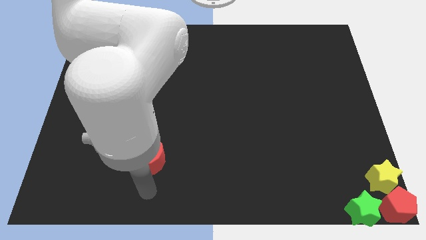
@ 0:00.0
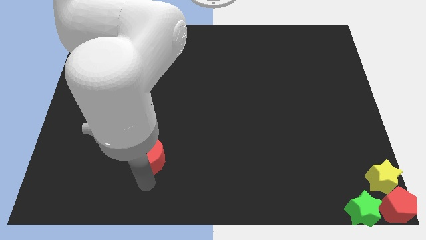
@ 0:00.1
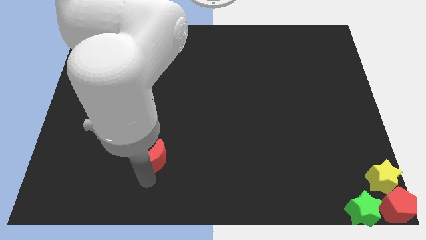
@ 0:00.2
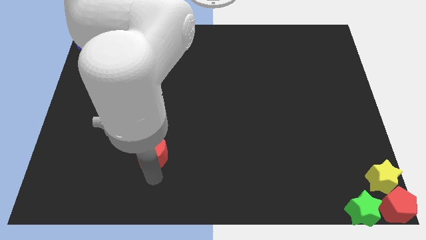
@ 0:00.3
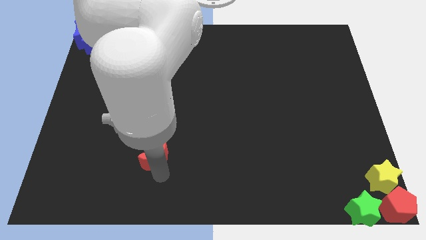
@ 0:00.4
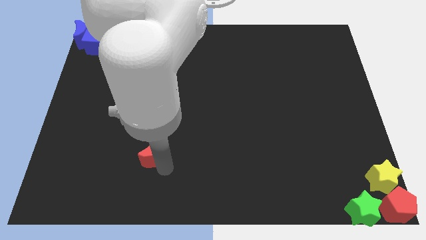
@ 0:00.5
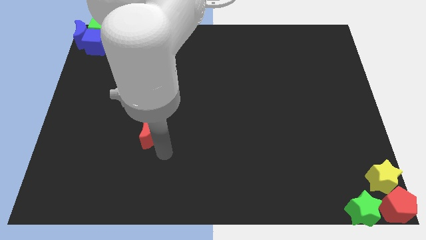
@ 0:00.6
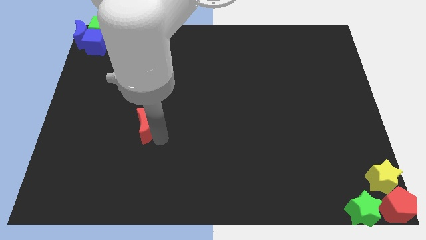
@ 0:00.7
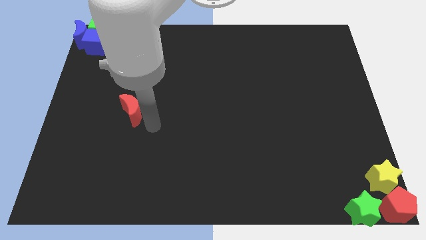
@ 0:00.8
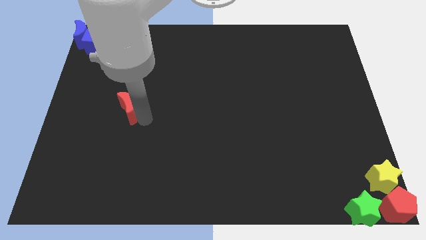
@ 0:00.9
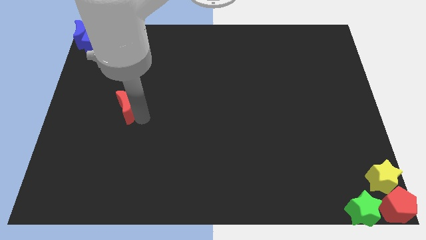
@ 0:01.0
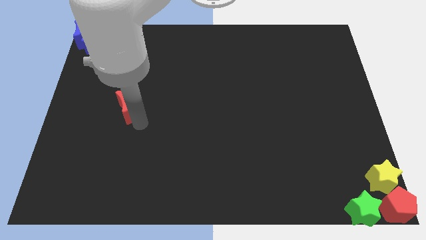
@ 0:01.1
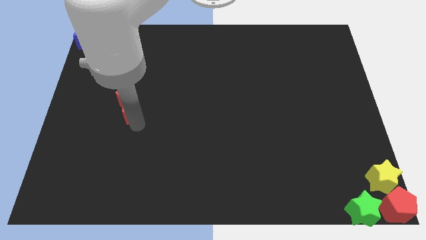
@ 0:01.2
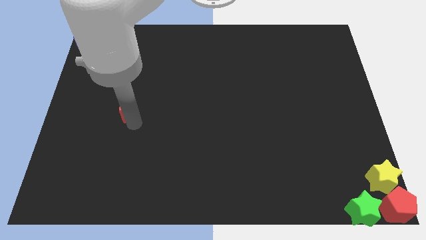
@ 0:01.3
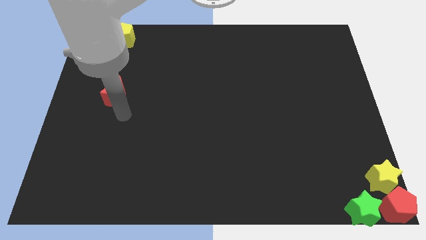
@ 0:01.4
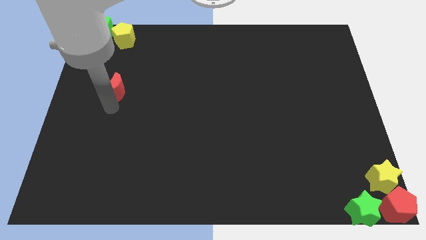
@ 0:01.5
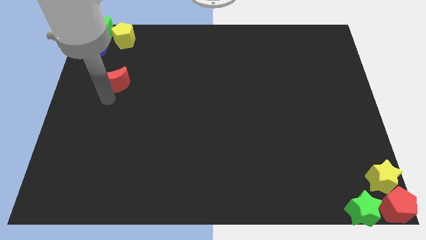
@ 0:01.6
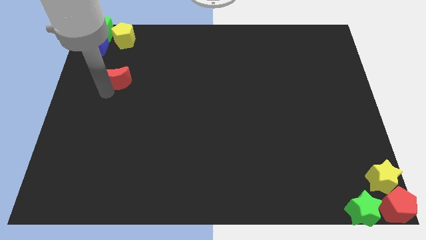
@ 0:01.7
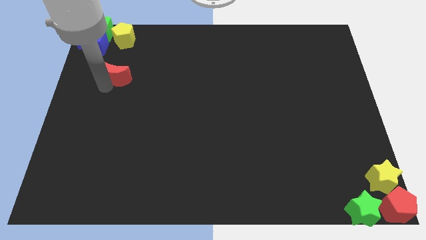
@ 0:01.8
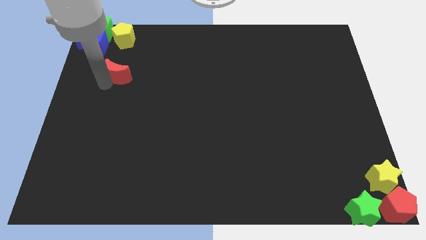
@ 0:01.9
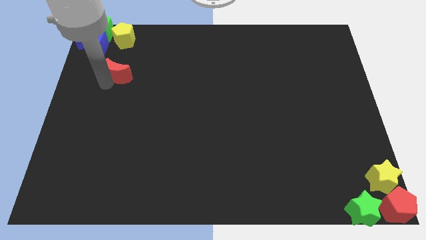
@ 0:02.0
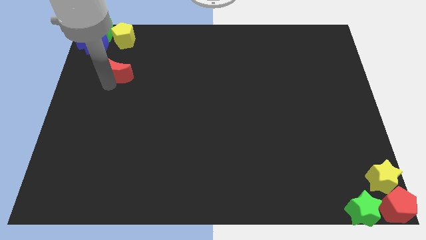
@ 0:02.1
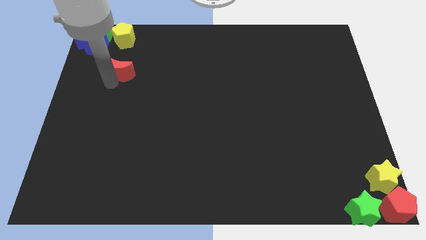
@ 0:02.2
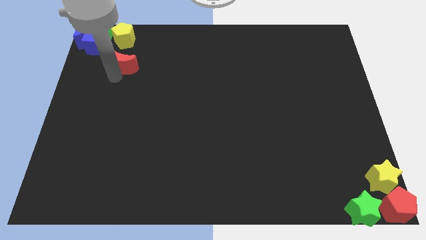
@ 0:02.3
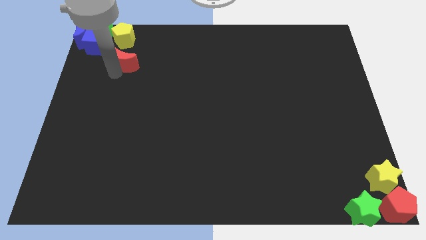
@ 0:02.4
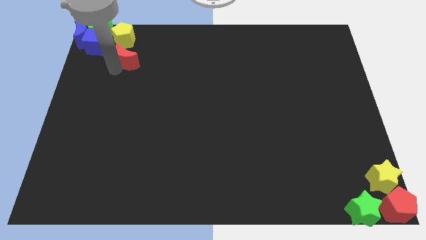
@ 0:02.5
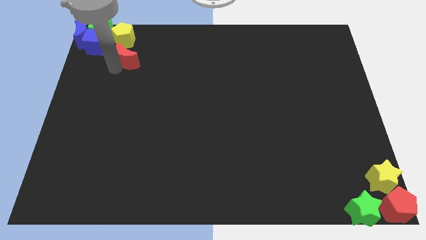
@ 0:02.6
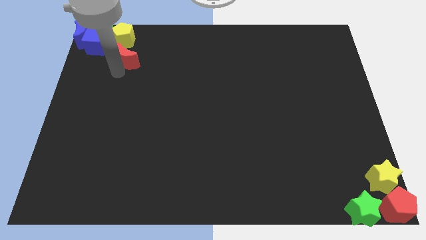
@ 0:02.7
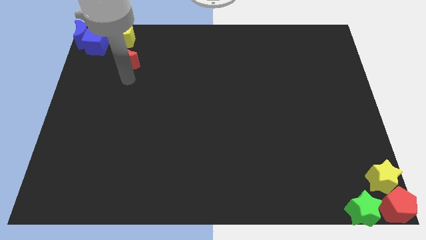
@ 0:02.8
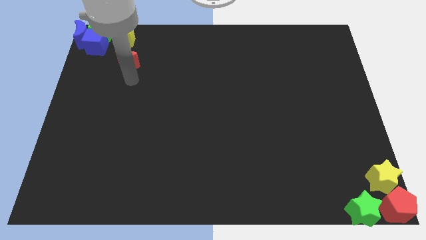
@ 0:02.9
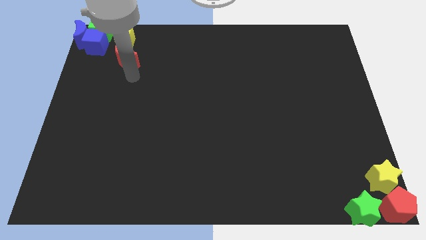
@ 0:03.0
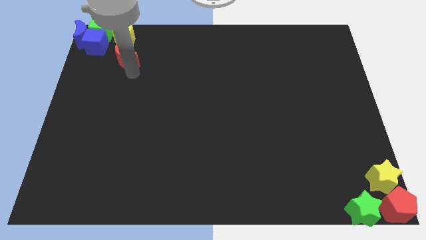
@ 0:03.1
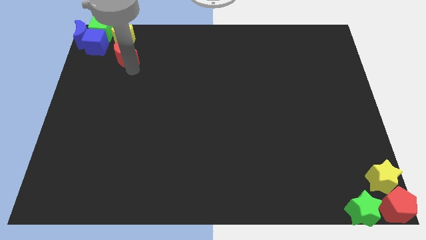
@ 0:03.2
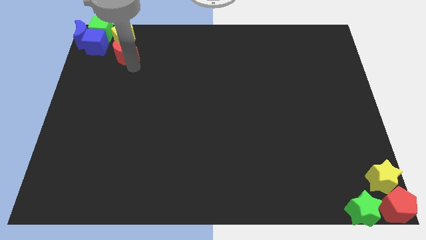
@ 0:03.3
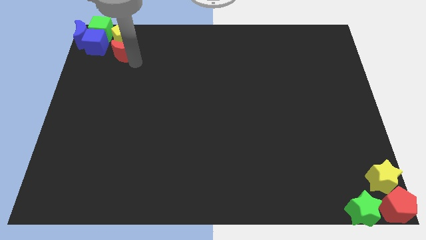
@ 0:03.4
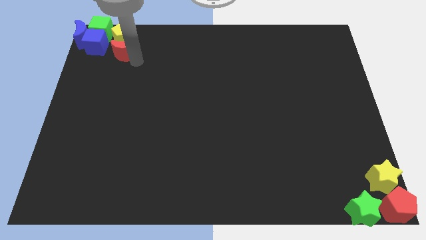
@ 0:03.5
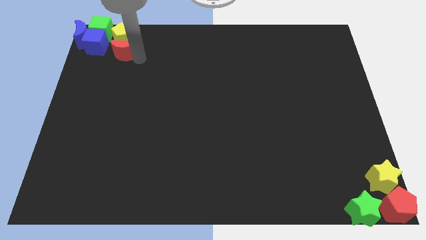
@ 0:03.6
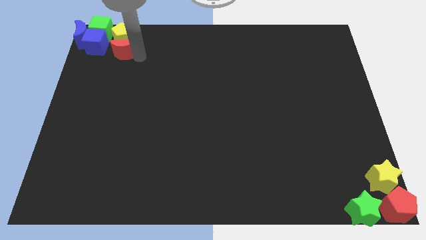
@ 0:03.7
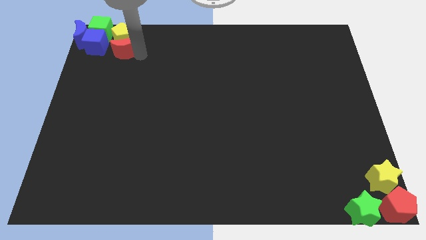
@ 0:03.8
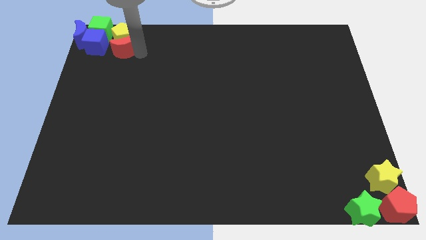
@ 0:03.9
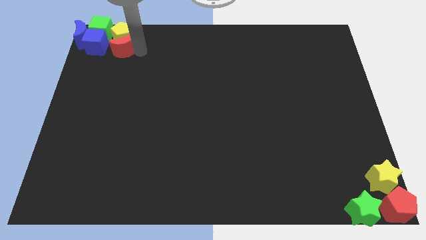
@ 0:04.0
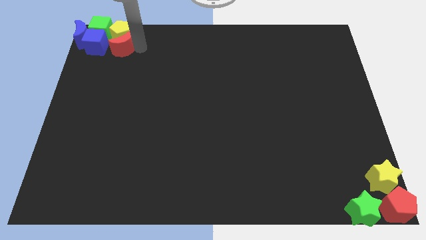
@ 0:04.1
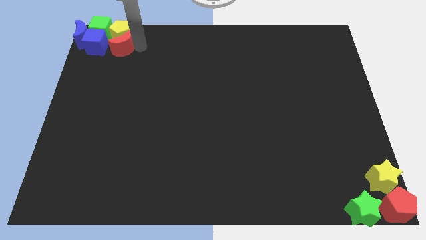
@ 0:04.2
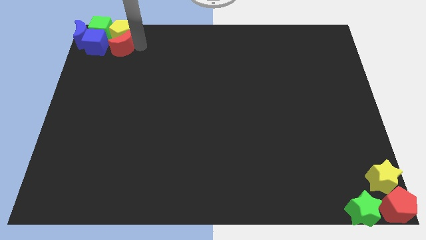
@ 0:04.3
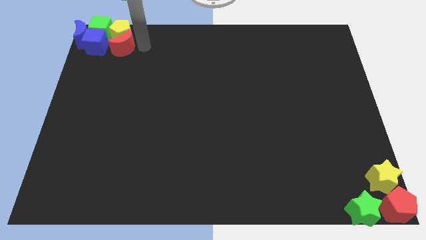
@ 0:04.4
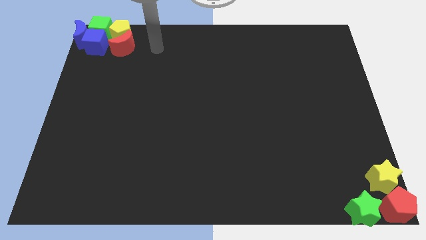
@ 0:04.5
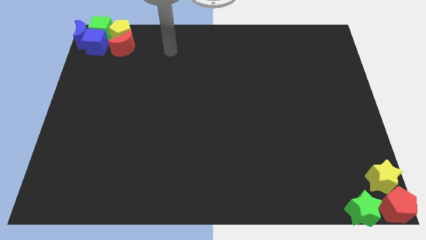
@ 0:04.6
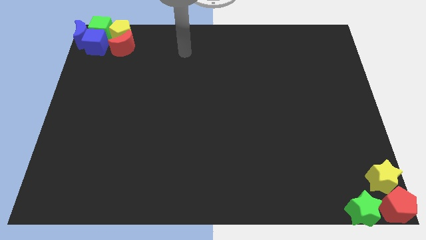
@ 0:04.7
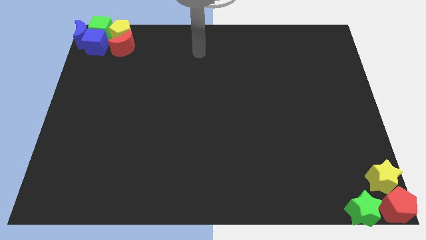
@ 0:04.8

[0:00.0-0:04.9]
place the red moon below the yellow pentagon

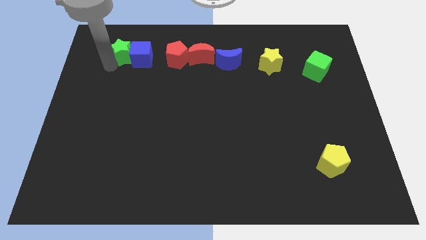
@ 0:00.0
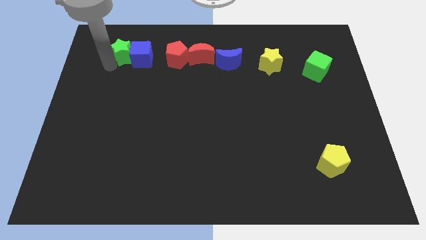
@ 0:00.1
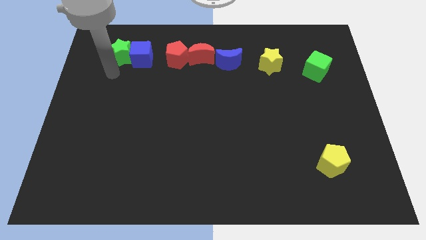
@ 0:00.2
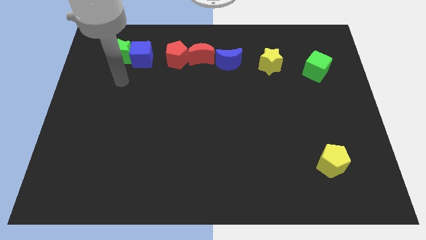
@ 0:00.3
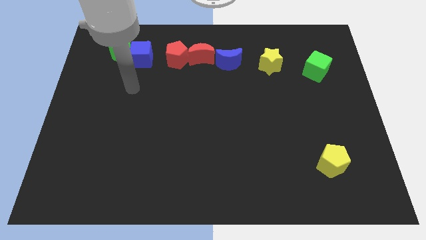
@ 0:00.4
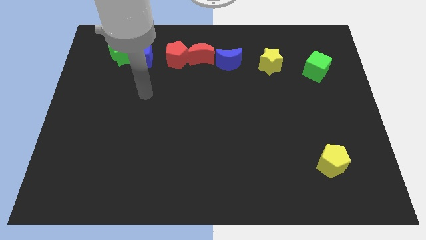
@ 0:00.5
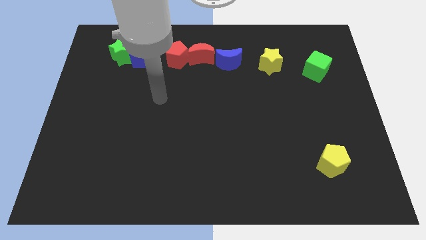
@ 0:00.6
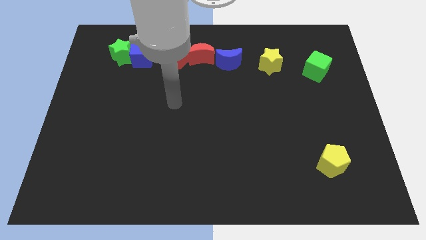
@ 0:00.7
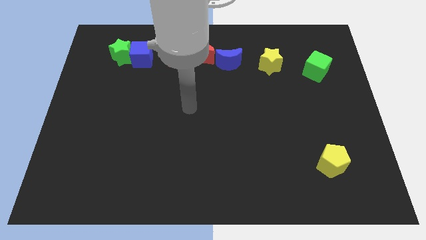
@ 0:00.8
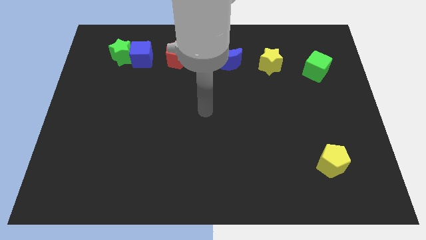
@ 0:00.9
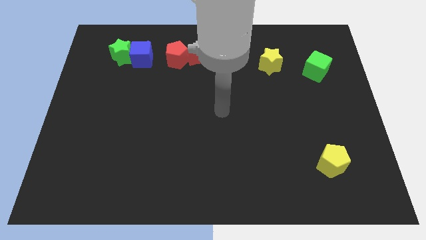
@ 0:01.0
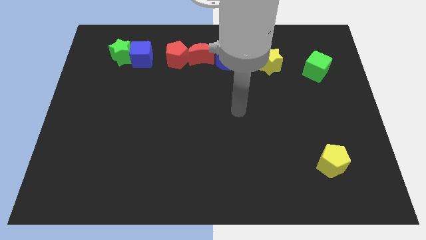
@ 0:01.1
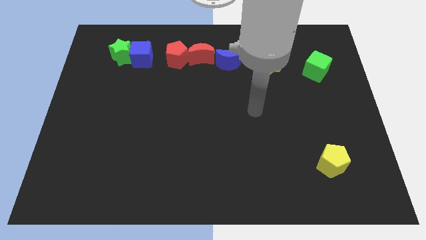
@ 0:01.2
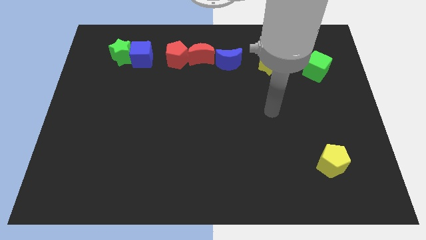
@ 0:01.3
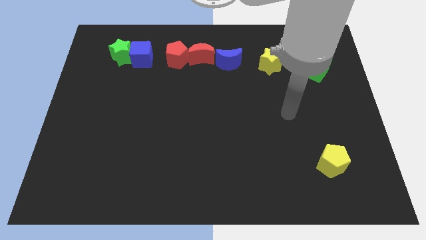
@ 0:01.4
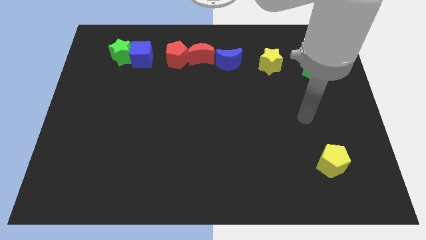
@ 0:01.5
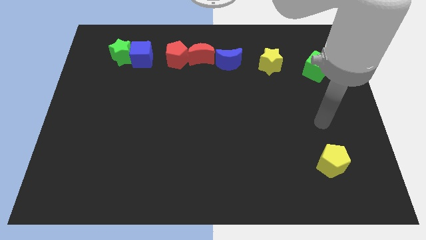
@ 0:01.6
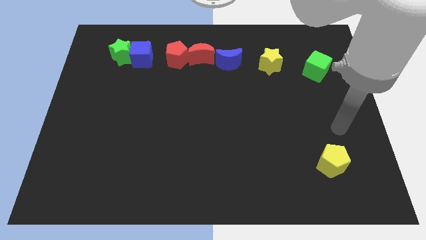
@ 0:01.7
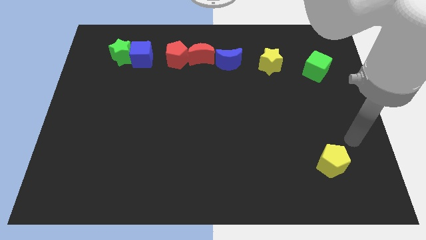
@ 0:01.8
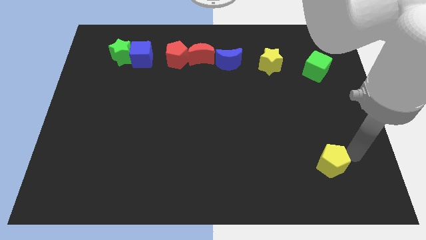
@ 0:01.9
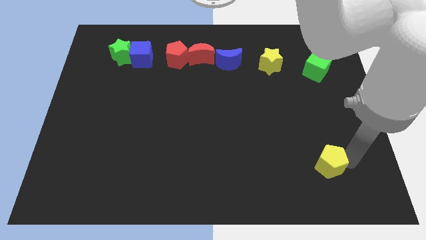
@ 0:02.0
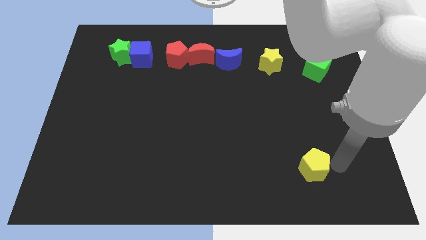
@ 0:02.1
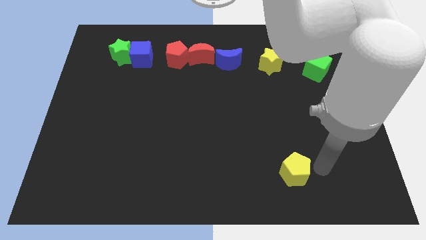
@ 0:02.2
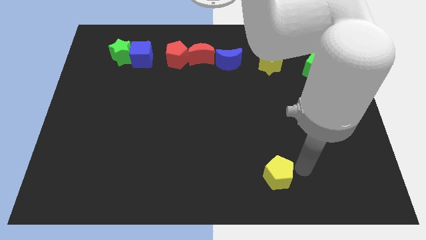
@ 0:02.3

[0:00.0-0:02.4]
place yellow pentagon to the bottom of the yellow star

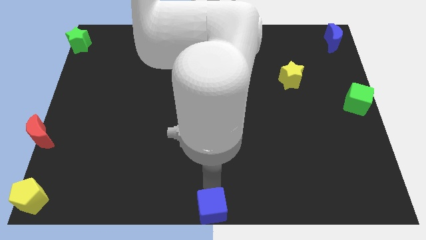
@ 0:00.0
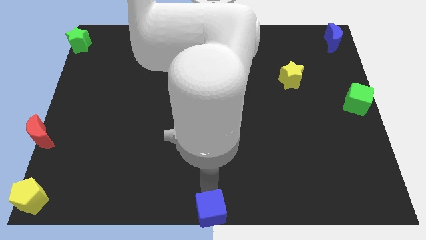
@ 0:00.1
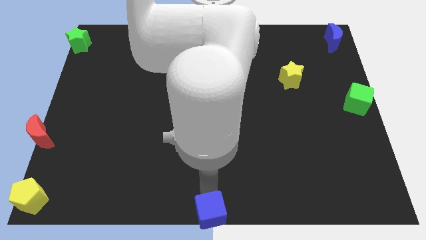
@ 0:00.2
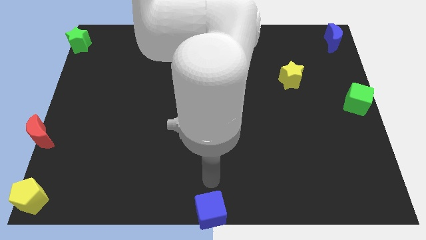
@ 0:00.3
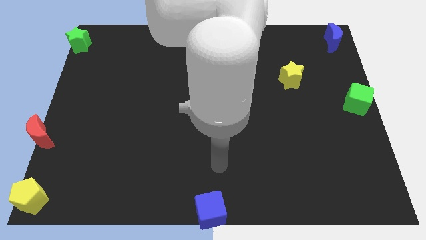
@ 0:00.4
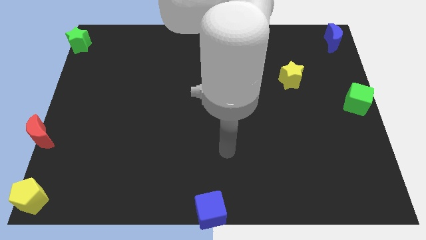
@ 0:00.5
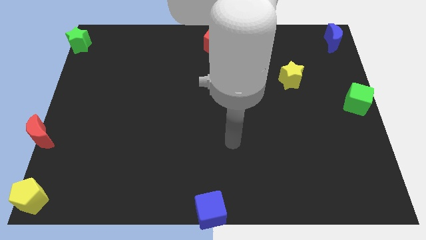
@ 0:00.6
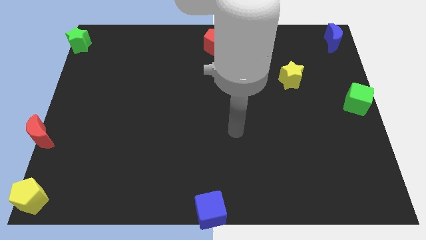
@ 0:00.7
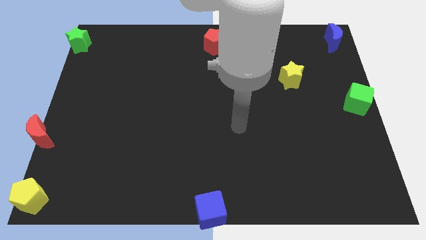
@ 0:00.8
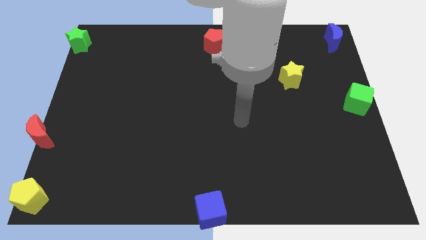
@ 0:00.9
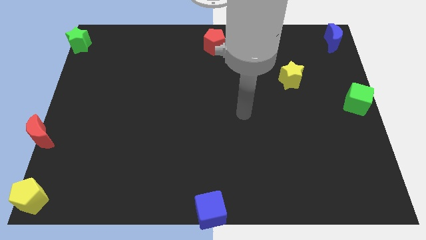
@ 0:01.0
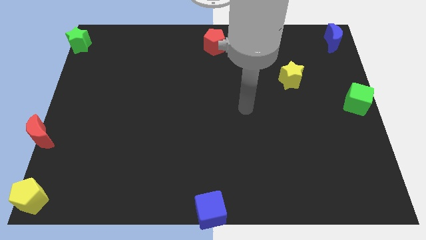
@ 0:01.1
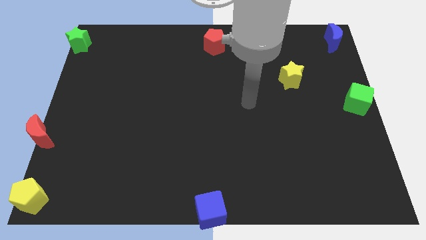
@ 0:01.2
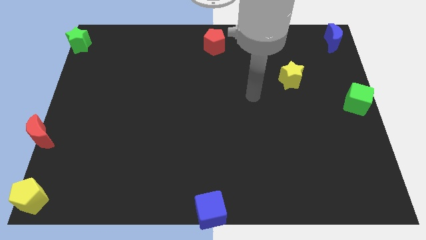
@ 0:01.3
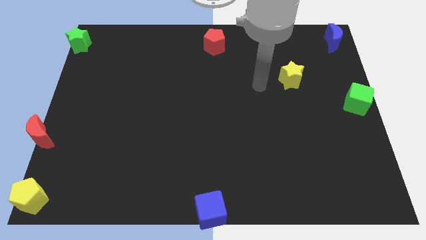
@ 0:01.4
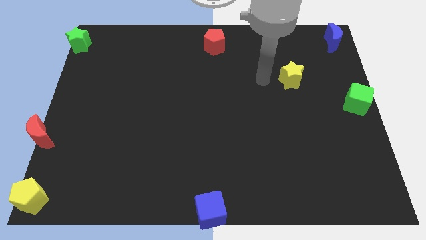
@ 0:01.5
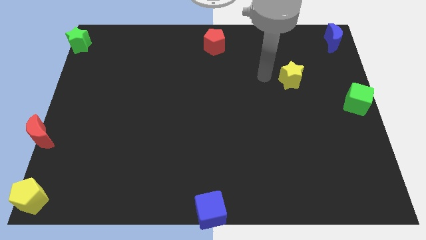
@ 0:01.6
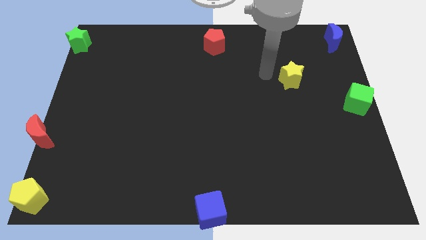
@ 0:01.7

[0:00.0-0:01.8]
move your arm towards the right top of the yellow star
